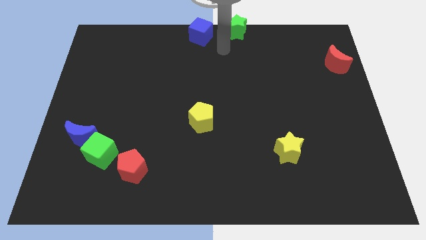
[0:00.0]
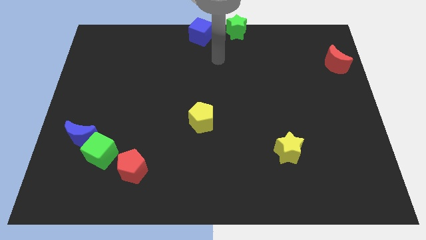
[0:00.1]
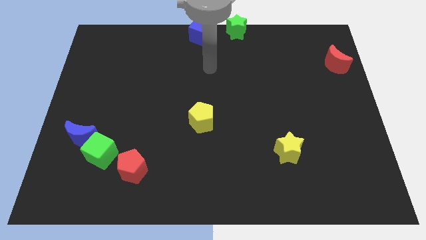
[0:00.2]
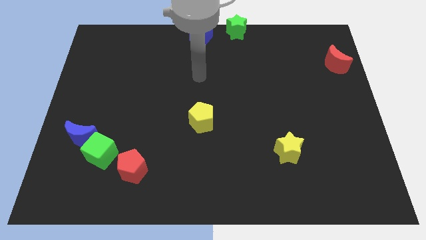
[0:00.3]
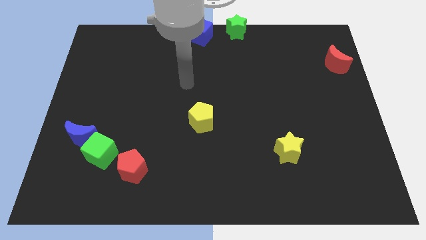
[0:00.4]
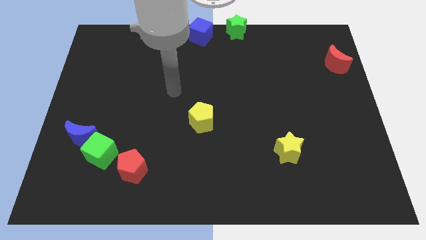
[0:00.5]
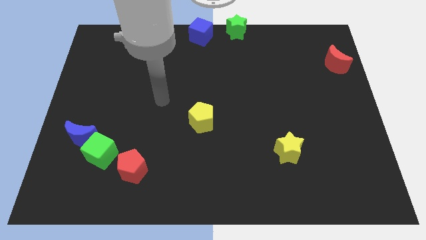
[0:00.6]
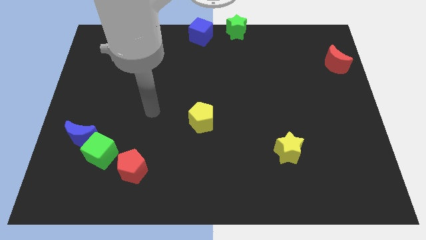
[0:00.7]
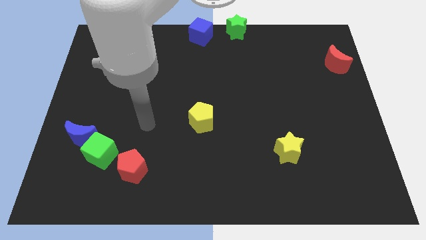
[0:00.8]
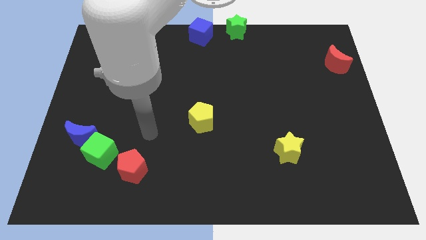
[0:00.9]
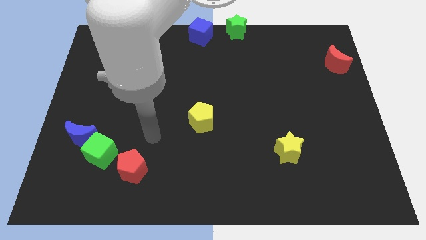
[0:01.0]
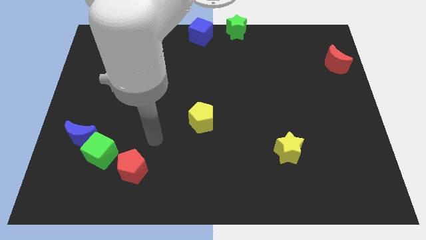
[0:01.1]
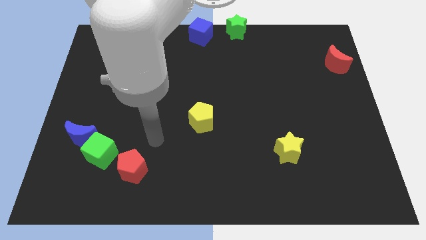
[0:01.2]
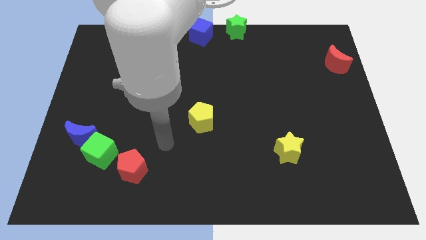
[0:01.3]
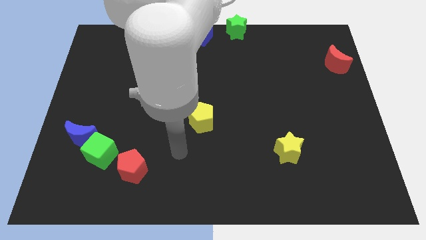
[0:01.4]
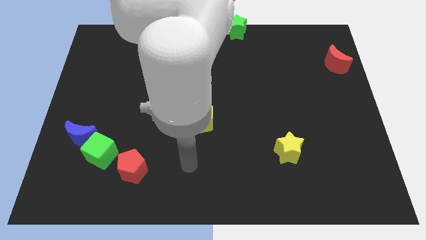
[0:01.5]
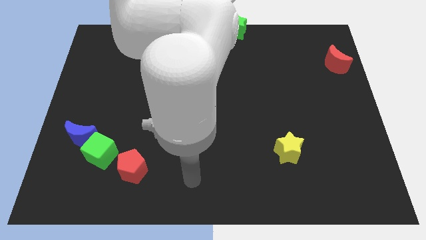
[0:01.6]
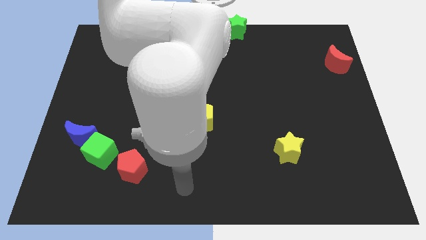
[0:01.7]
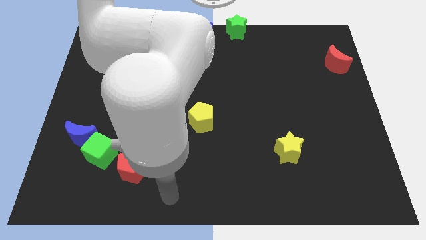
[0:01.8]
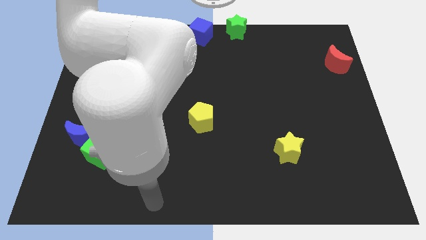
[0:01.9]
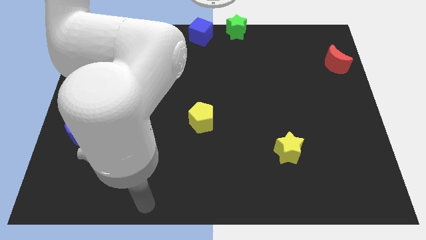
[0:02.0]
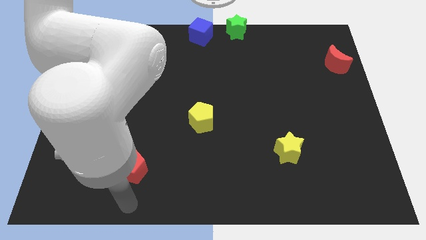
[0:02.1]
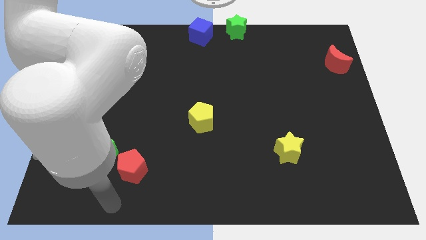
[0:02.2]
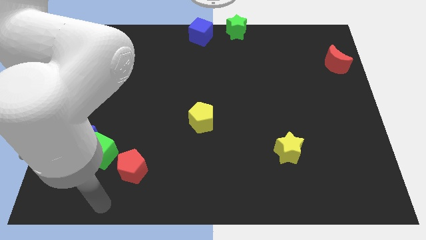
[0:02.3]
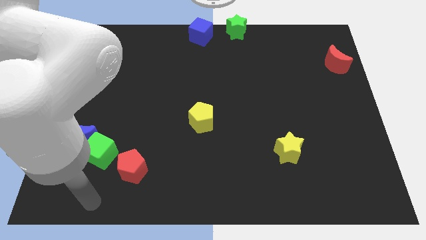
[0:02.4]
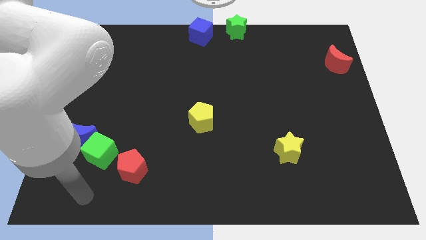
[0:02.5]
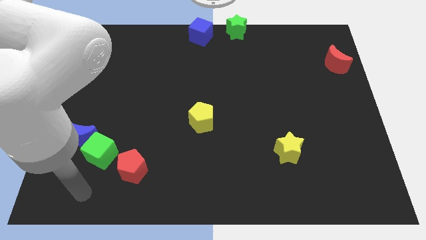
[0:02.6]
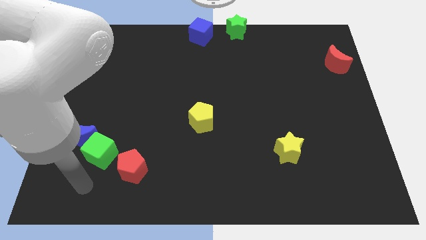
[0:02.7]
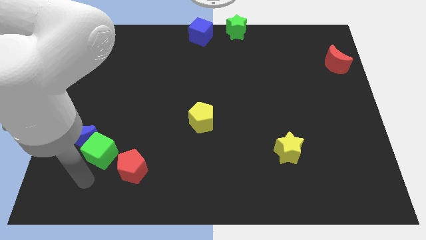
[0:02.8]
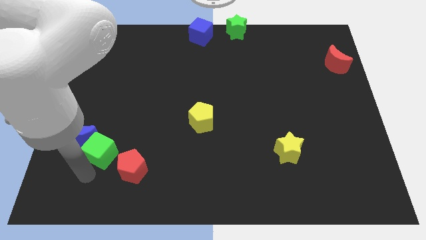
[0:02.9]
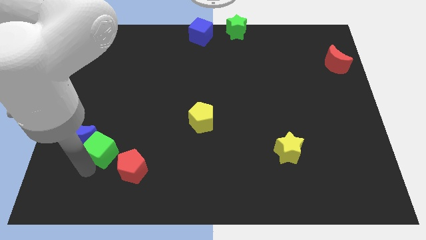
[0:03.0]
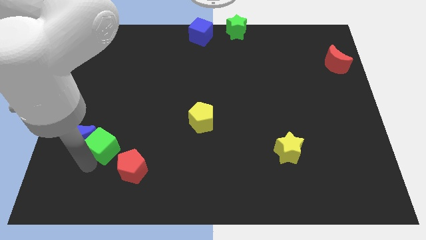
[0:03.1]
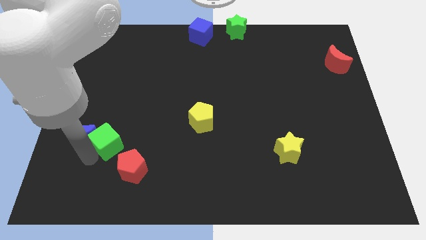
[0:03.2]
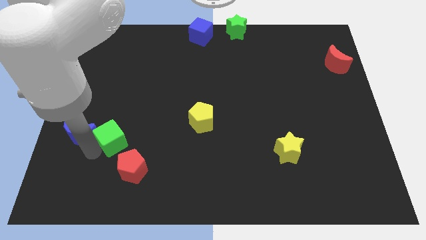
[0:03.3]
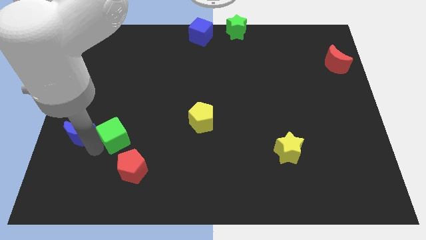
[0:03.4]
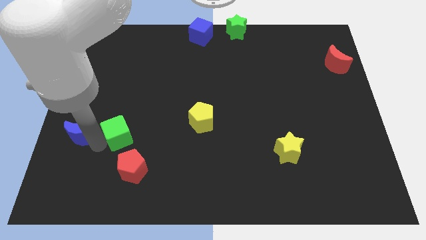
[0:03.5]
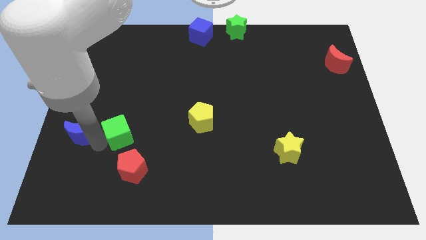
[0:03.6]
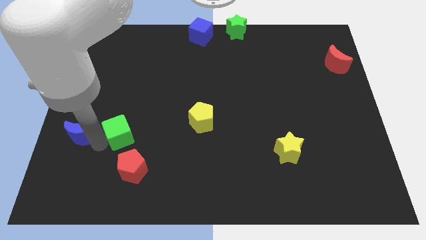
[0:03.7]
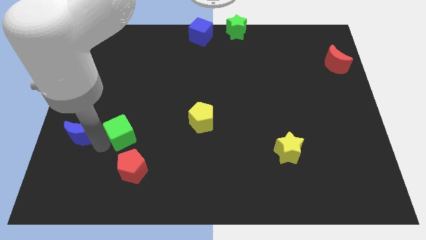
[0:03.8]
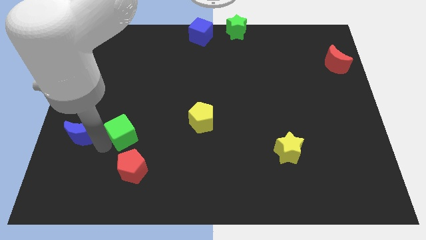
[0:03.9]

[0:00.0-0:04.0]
move your arm towards the green cube on the bottom left of the board

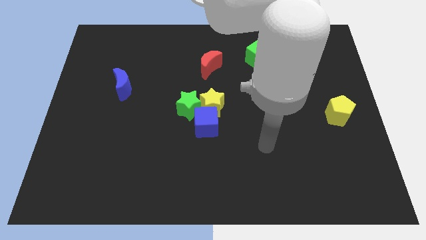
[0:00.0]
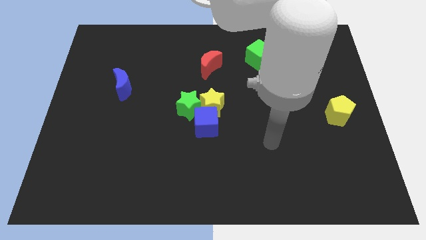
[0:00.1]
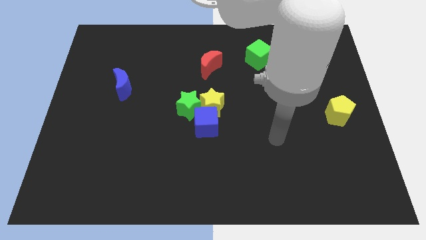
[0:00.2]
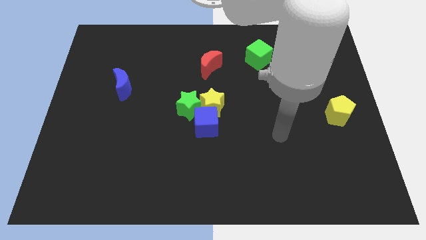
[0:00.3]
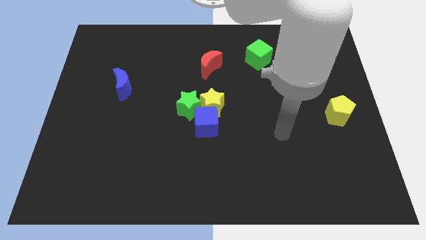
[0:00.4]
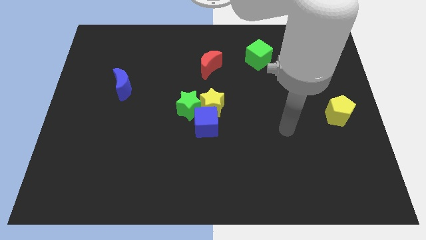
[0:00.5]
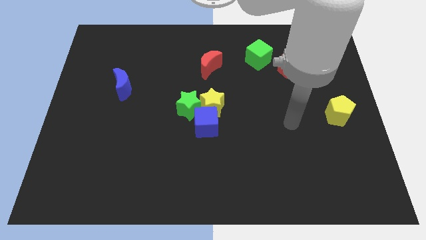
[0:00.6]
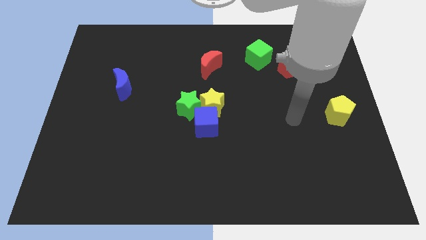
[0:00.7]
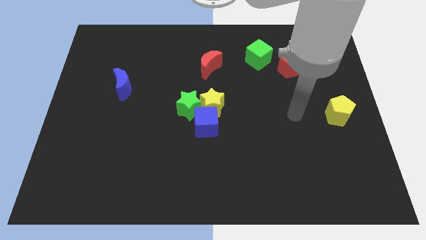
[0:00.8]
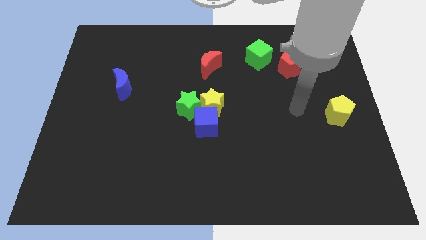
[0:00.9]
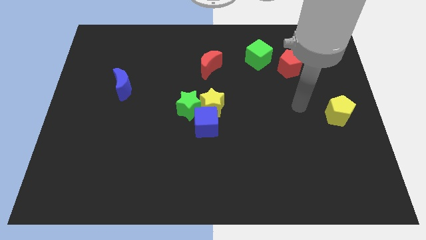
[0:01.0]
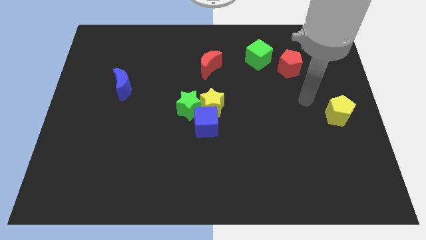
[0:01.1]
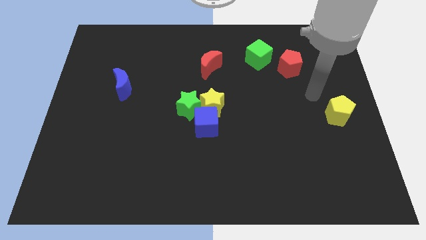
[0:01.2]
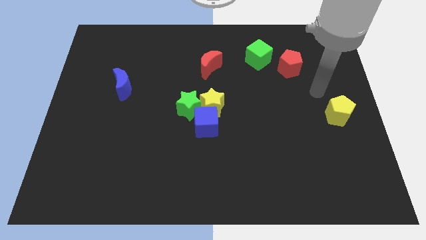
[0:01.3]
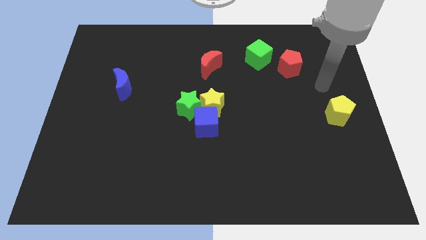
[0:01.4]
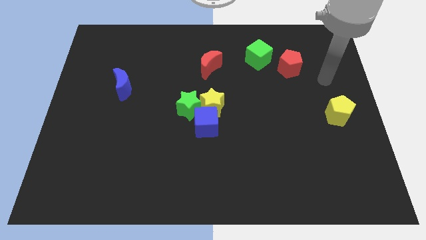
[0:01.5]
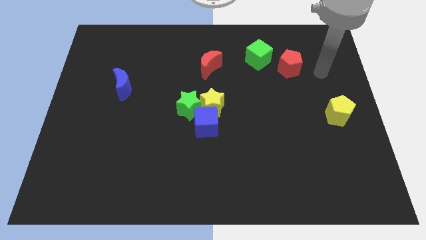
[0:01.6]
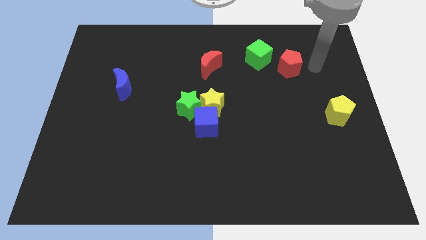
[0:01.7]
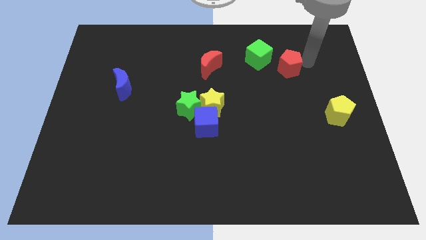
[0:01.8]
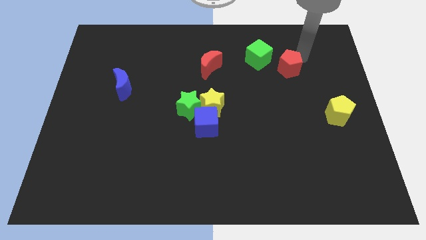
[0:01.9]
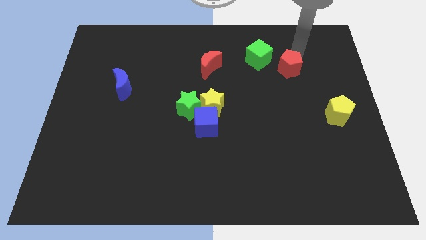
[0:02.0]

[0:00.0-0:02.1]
move your arm to the top of red pentagon

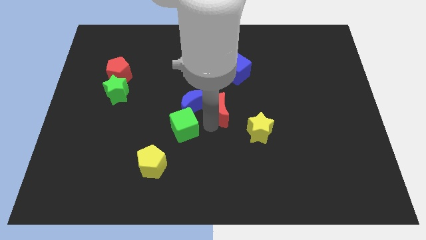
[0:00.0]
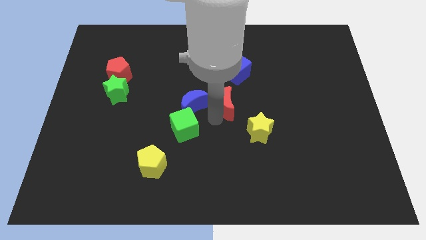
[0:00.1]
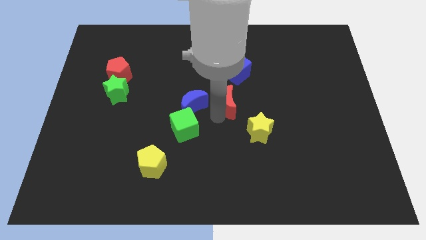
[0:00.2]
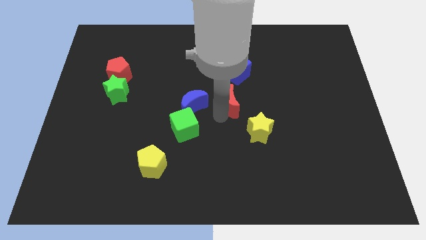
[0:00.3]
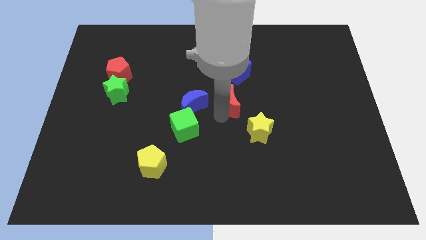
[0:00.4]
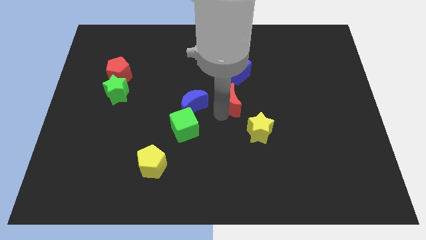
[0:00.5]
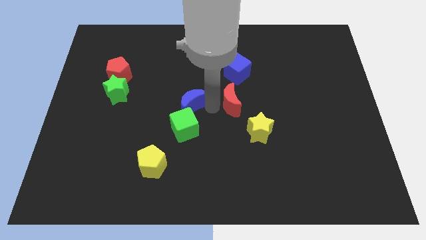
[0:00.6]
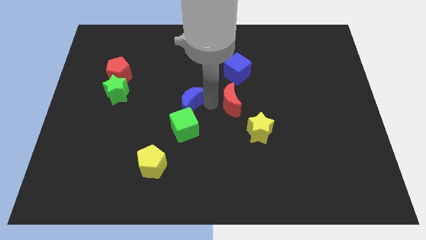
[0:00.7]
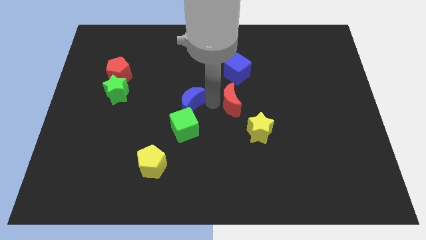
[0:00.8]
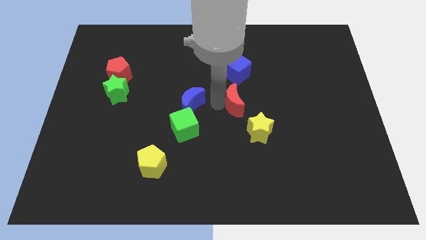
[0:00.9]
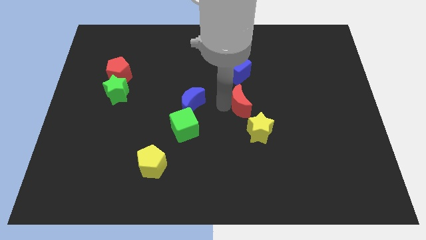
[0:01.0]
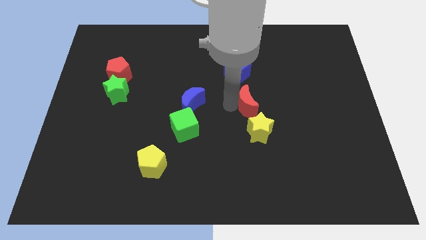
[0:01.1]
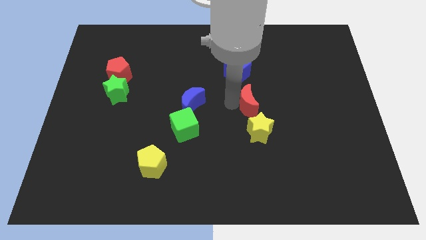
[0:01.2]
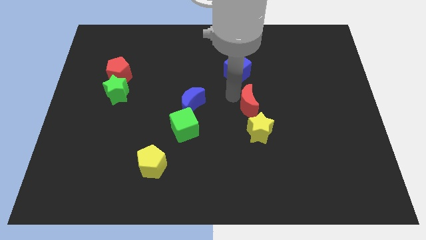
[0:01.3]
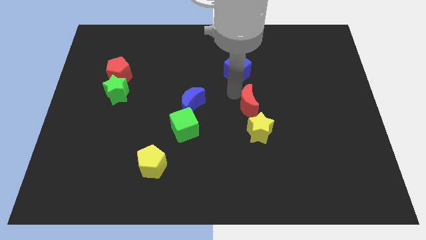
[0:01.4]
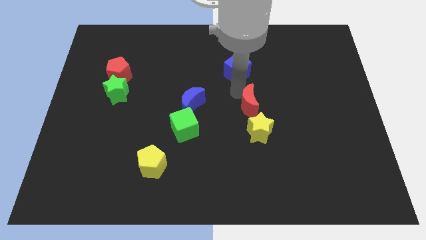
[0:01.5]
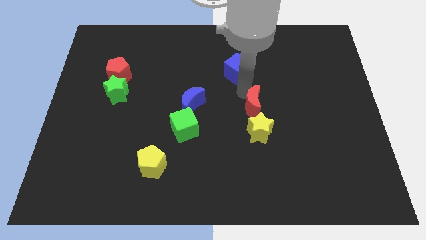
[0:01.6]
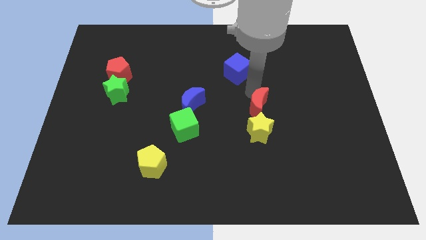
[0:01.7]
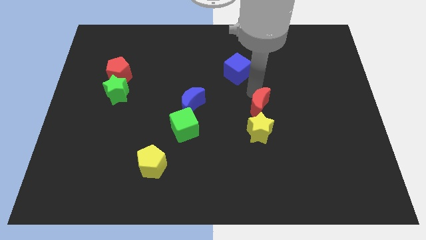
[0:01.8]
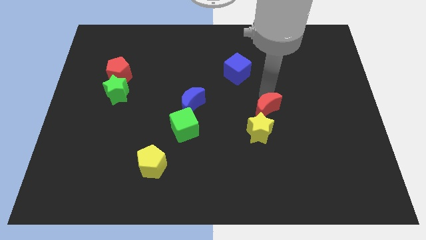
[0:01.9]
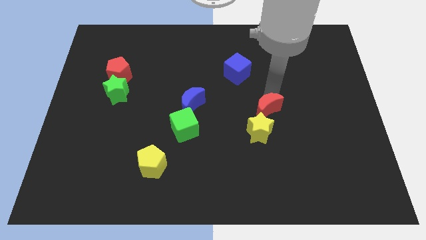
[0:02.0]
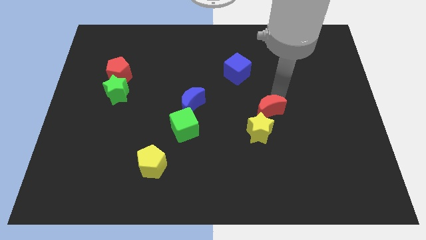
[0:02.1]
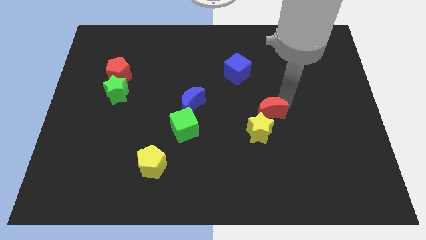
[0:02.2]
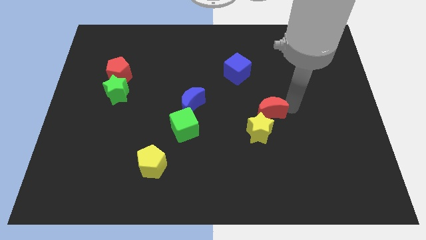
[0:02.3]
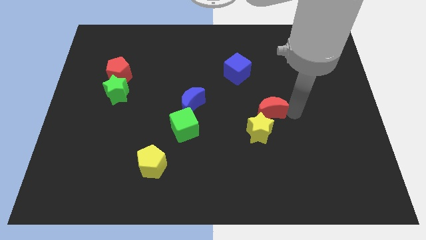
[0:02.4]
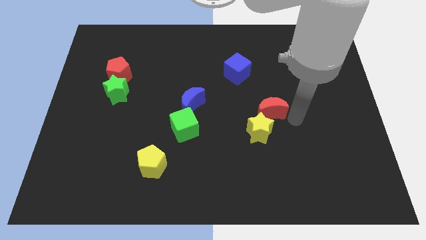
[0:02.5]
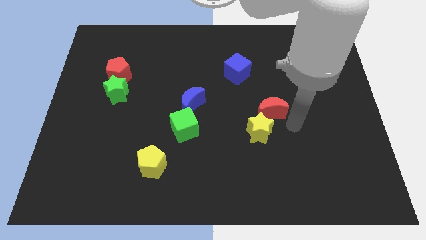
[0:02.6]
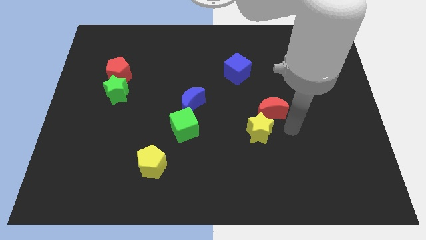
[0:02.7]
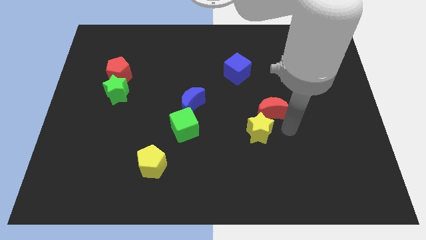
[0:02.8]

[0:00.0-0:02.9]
move the red crescent close to the yellow star

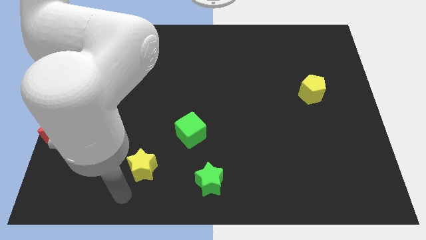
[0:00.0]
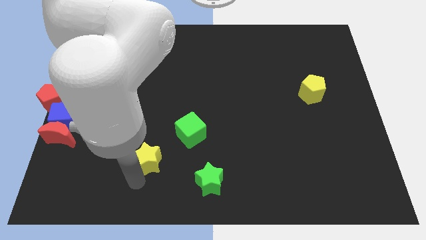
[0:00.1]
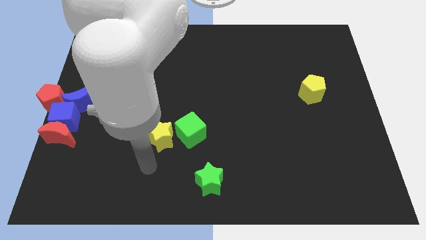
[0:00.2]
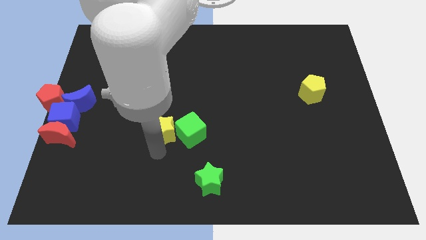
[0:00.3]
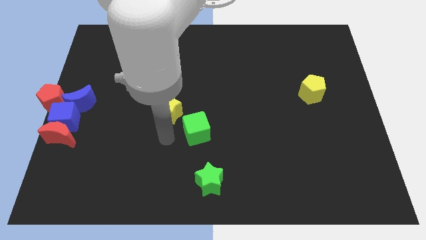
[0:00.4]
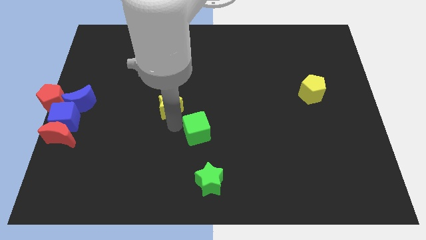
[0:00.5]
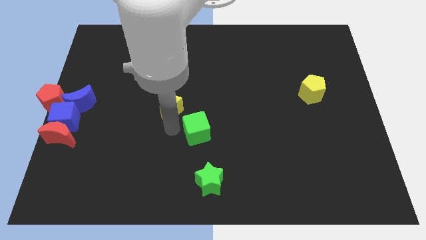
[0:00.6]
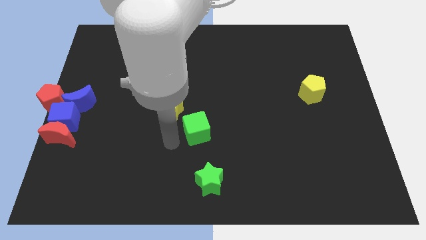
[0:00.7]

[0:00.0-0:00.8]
move yellow star left above the green cube
